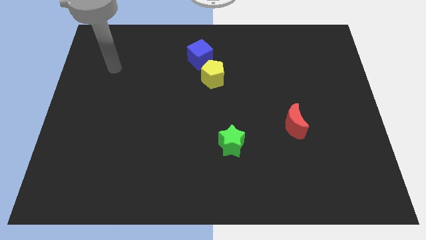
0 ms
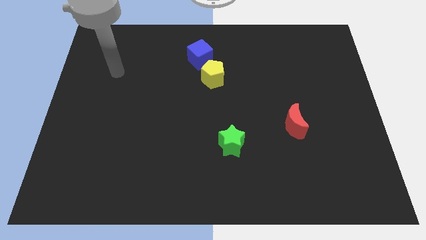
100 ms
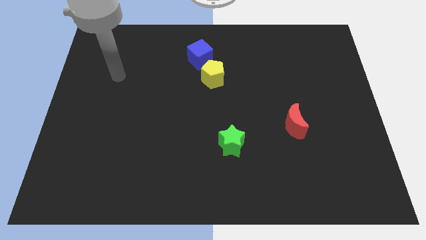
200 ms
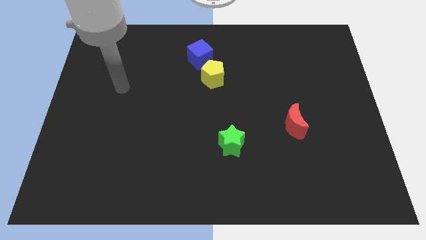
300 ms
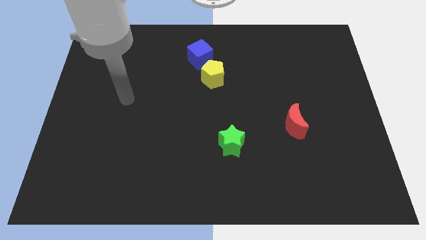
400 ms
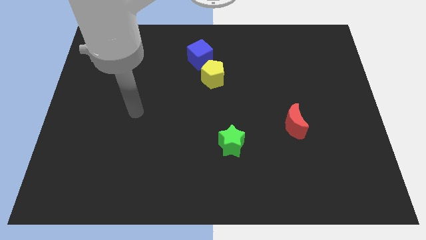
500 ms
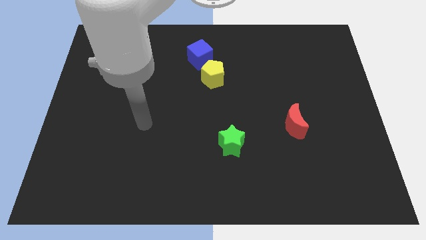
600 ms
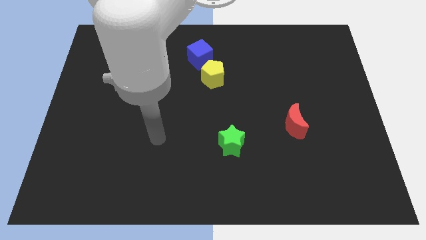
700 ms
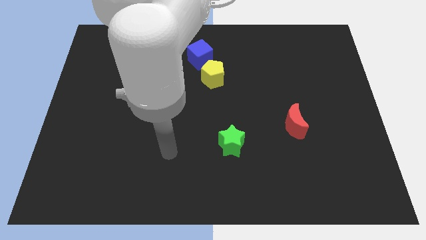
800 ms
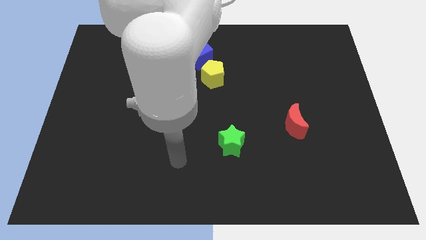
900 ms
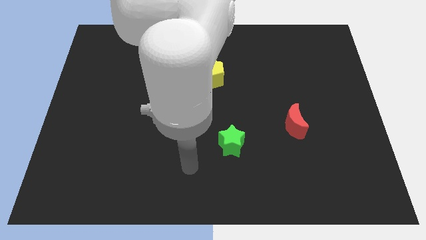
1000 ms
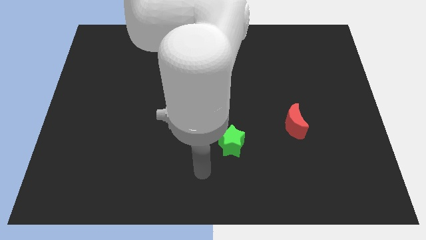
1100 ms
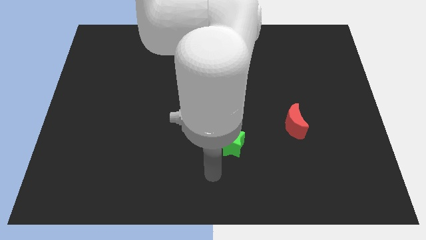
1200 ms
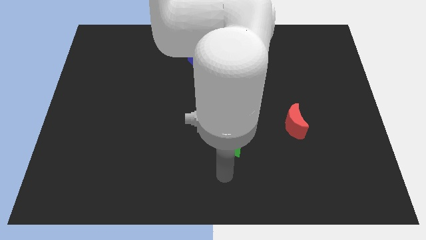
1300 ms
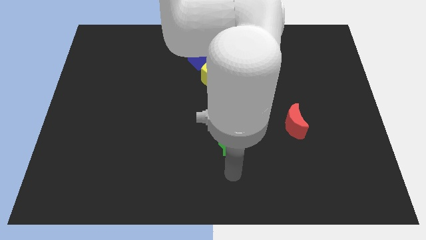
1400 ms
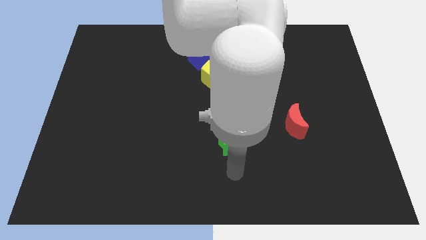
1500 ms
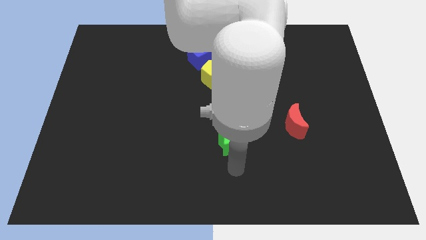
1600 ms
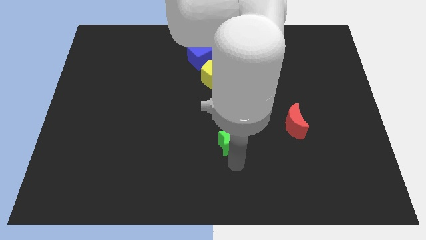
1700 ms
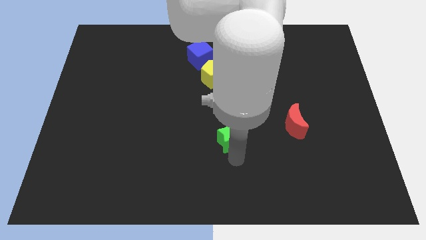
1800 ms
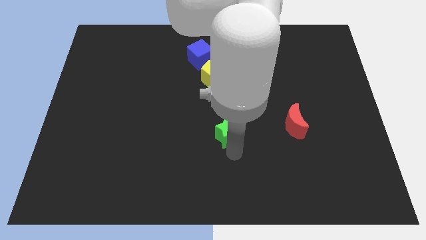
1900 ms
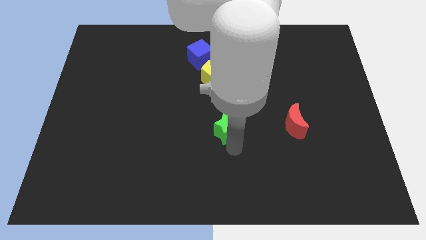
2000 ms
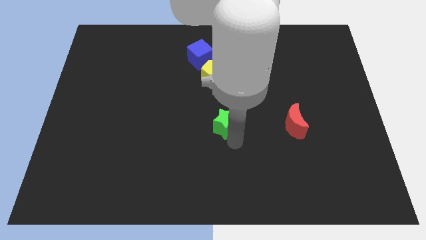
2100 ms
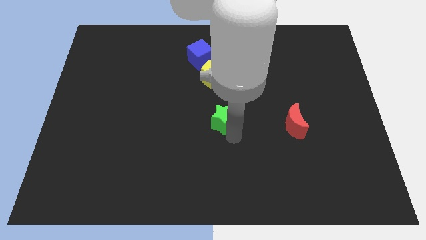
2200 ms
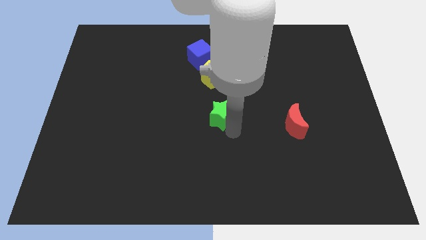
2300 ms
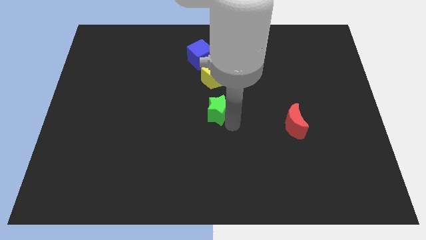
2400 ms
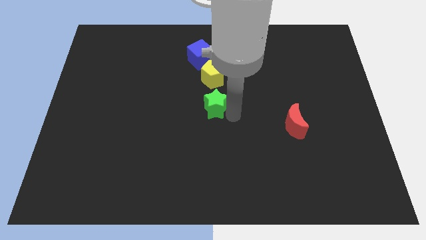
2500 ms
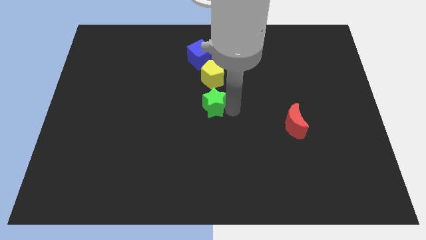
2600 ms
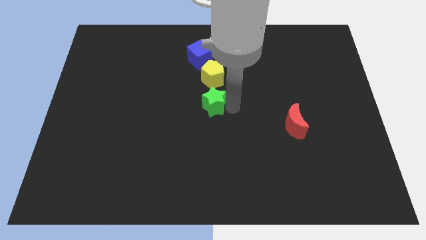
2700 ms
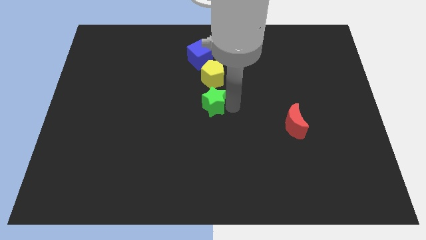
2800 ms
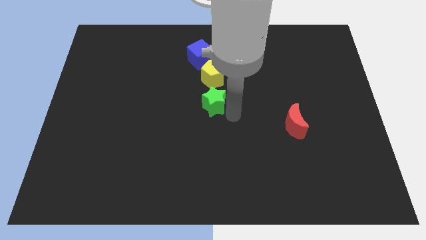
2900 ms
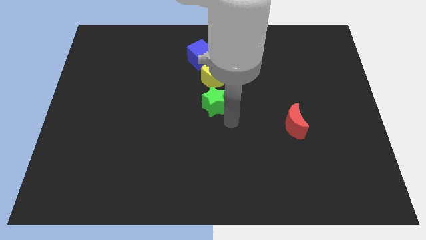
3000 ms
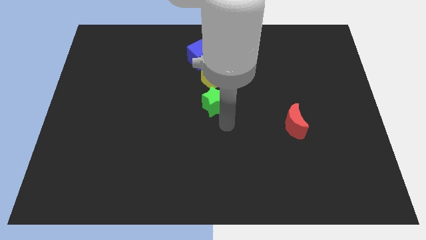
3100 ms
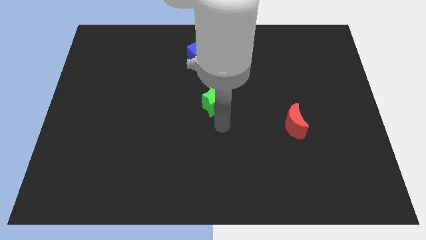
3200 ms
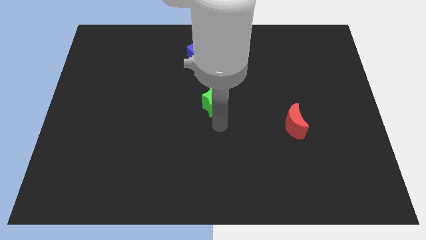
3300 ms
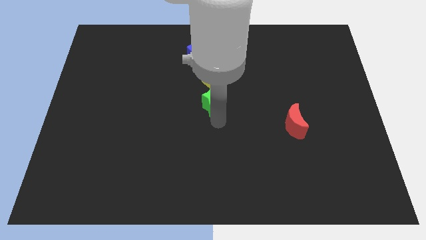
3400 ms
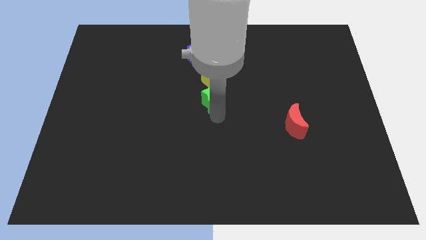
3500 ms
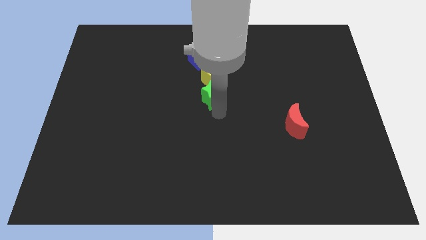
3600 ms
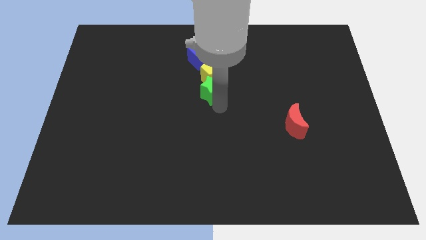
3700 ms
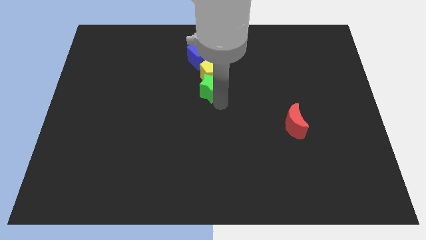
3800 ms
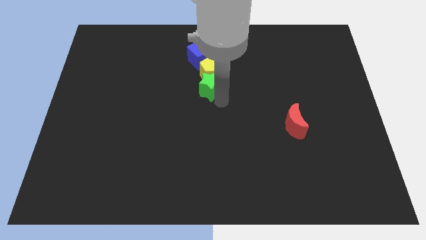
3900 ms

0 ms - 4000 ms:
put the green block towards the yellow block

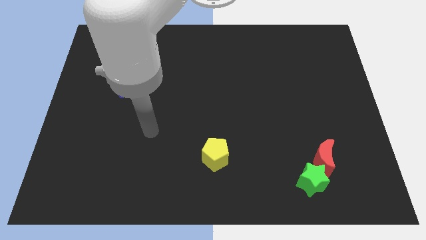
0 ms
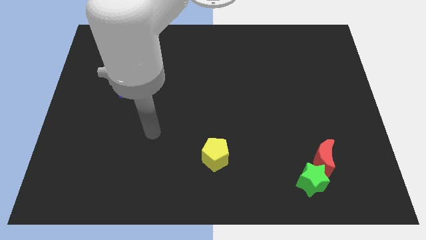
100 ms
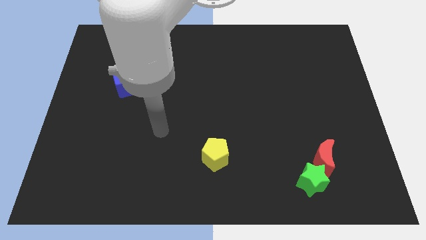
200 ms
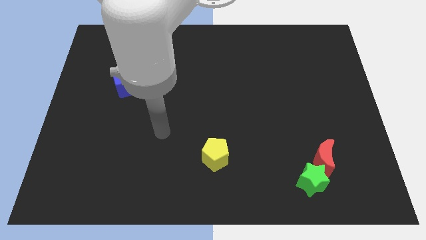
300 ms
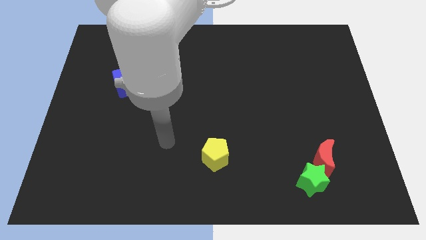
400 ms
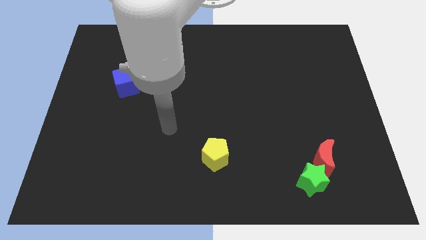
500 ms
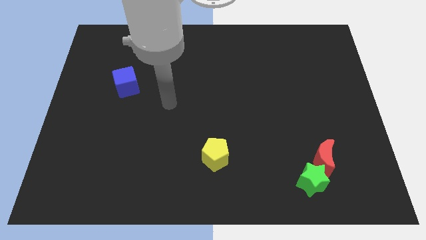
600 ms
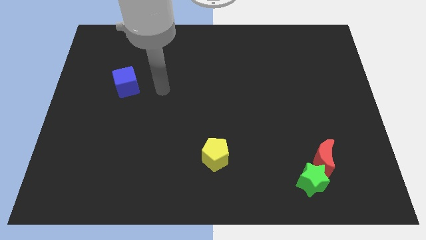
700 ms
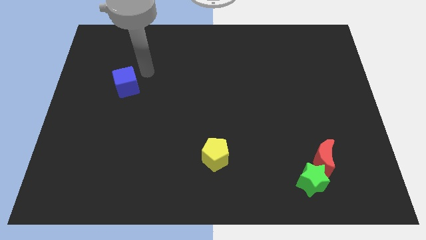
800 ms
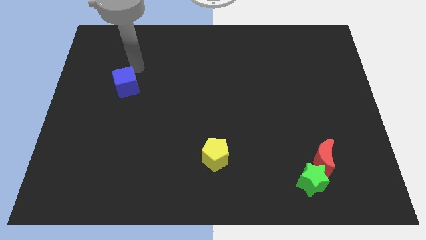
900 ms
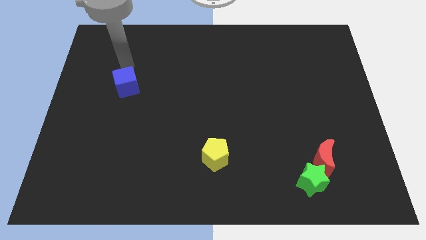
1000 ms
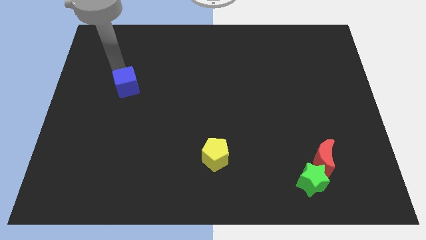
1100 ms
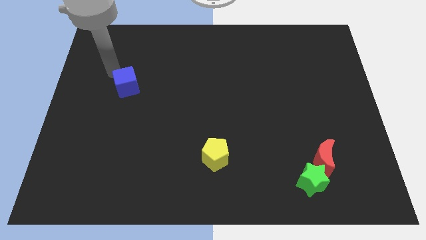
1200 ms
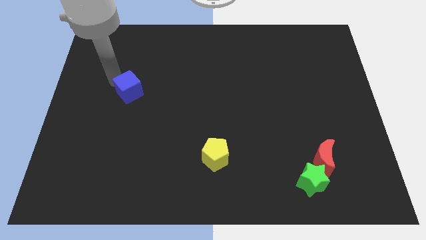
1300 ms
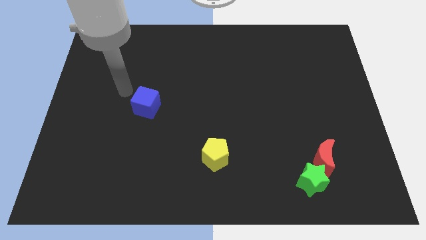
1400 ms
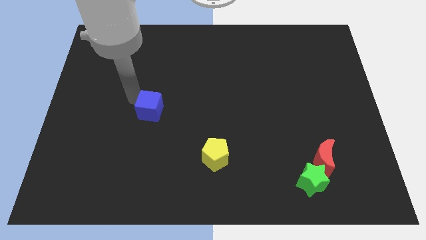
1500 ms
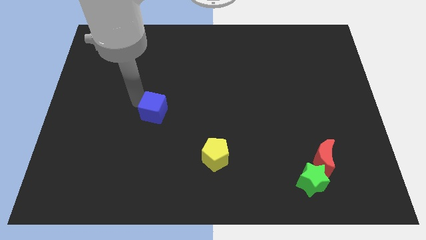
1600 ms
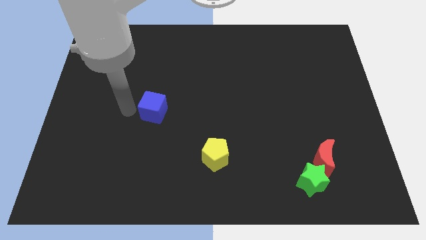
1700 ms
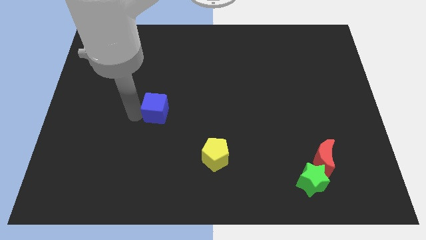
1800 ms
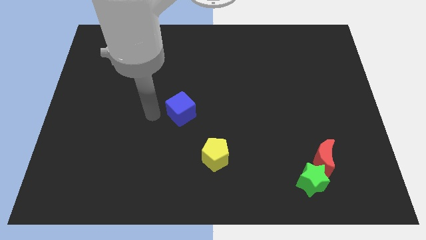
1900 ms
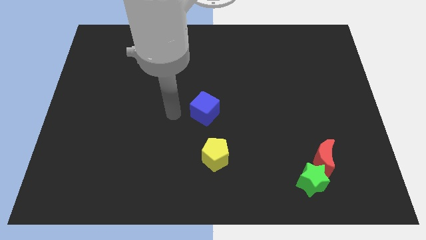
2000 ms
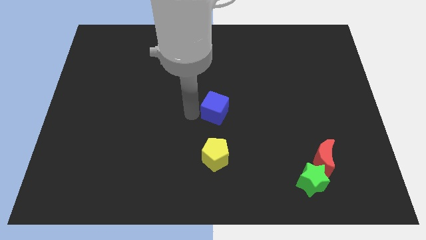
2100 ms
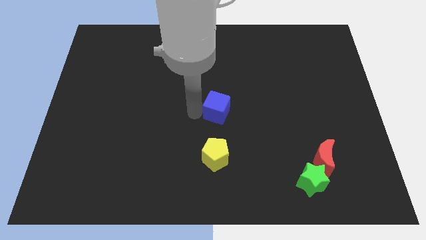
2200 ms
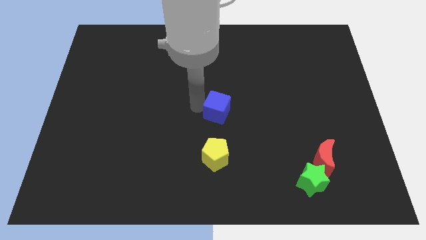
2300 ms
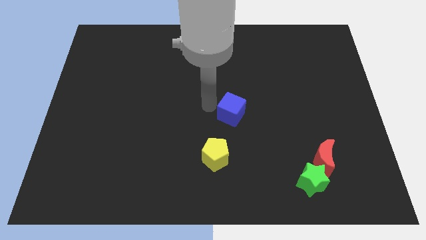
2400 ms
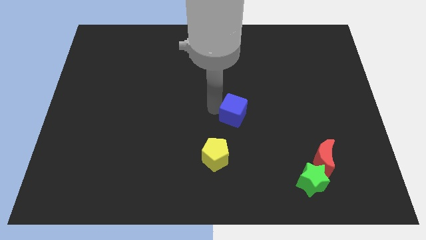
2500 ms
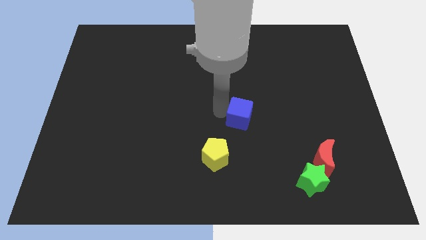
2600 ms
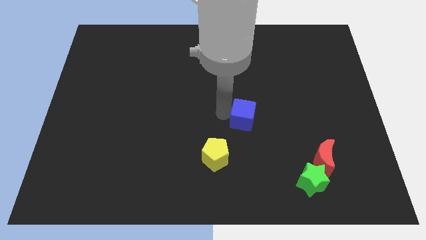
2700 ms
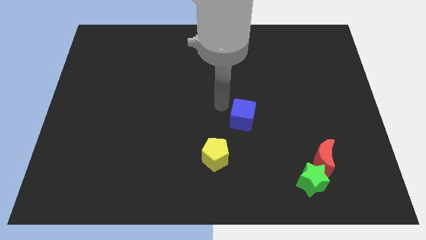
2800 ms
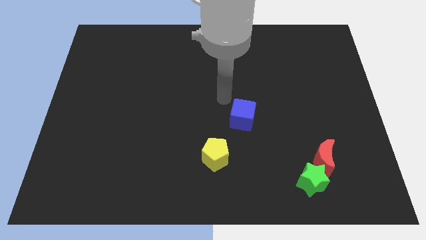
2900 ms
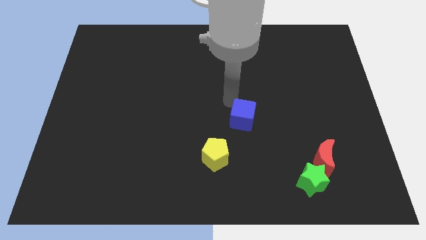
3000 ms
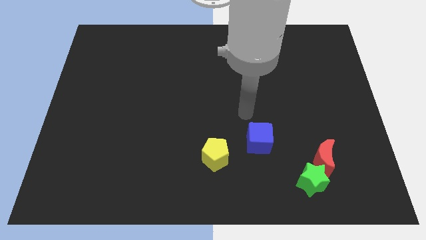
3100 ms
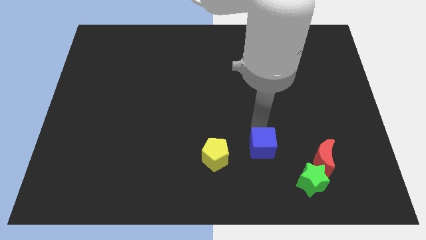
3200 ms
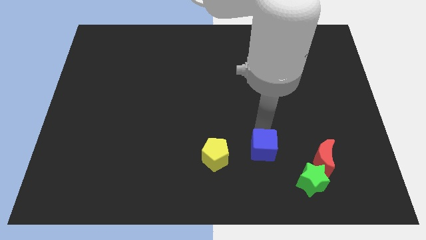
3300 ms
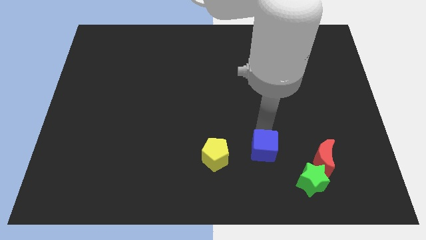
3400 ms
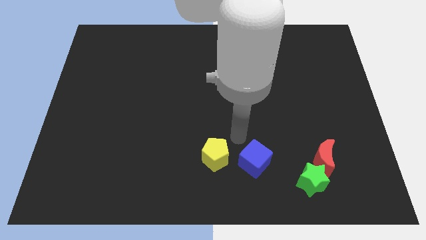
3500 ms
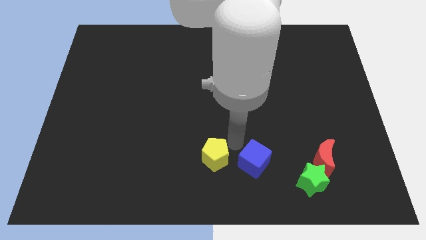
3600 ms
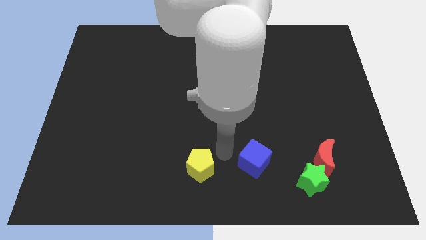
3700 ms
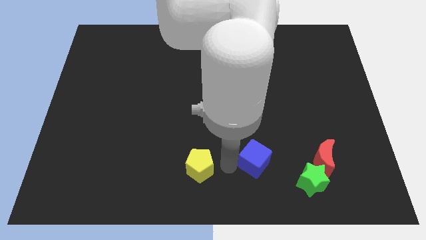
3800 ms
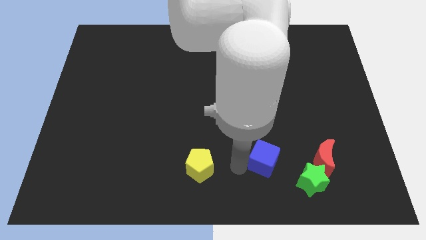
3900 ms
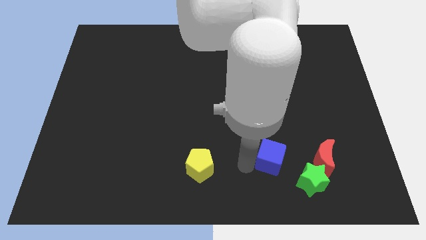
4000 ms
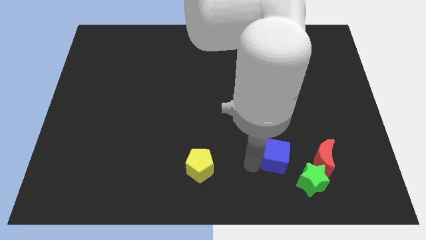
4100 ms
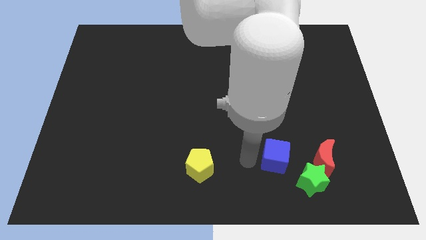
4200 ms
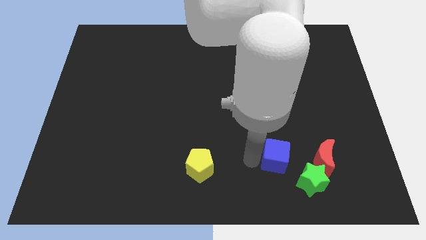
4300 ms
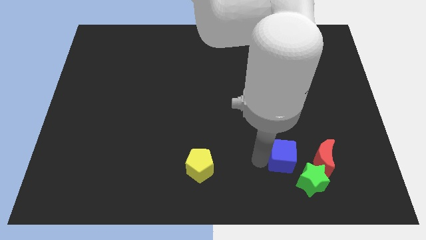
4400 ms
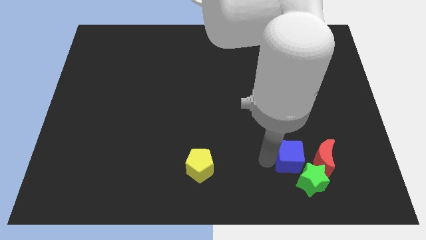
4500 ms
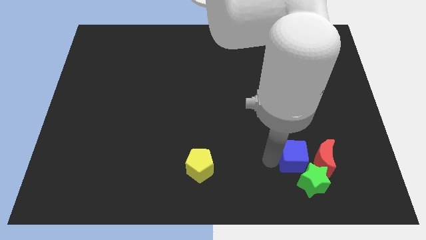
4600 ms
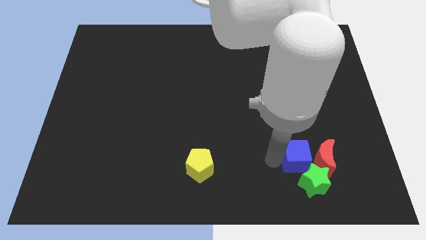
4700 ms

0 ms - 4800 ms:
push the cube towards the star

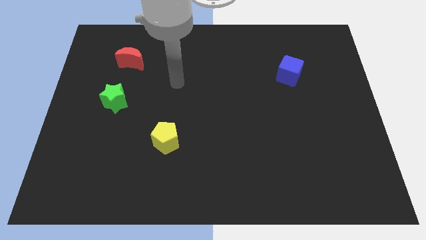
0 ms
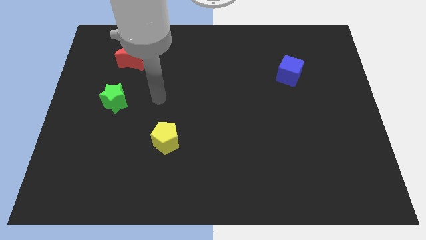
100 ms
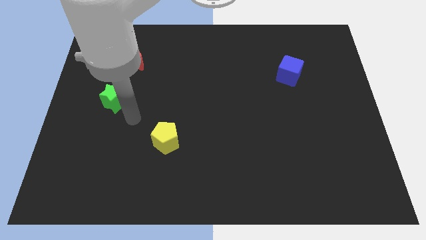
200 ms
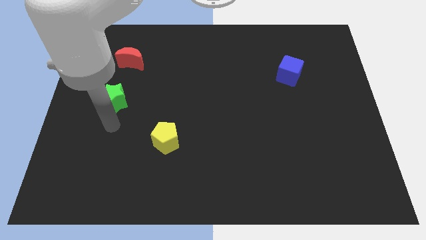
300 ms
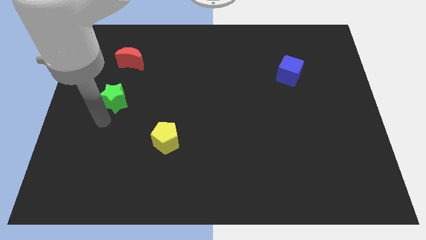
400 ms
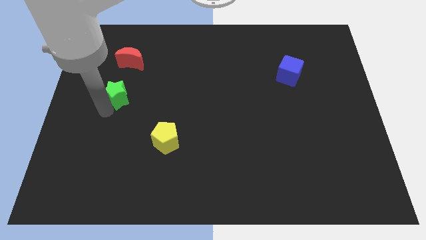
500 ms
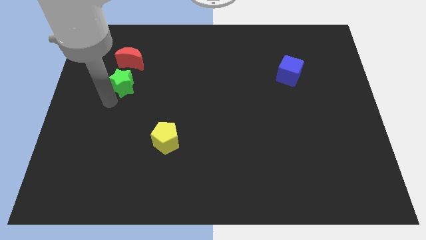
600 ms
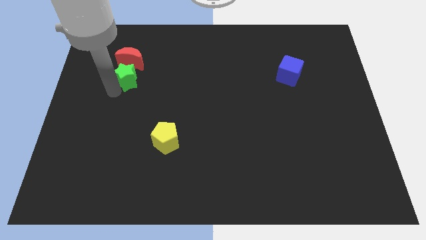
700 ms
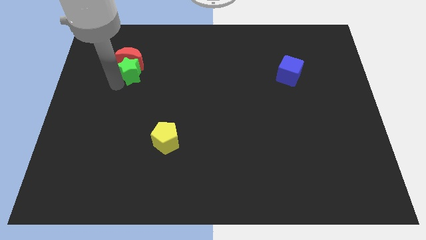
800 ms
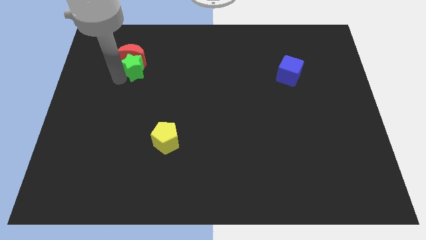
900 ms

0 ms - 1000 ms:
put the green block to the red moon
